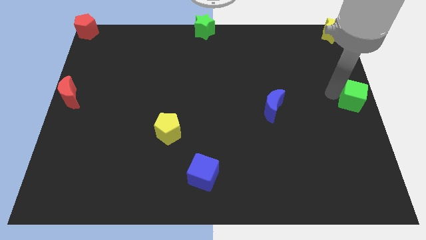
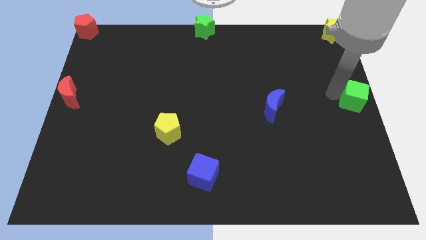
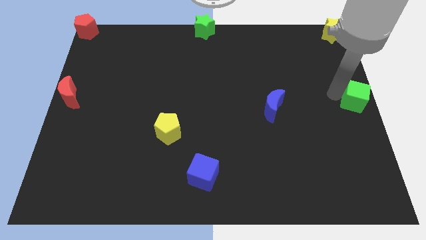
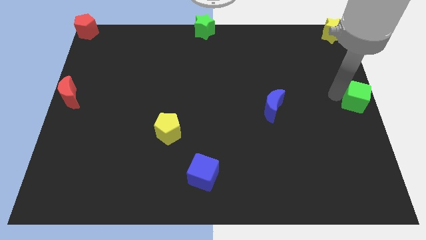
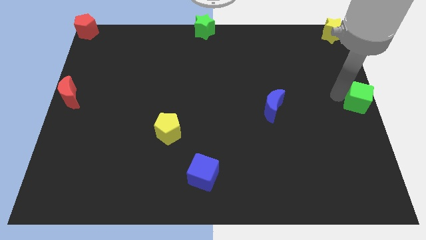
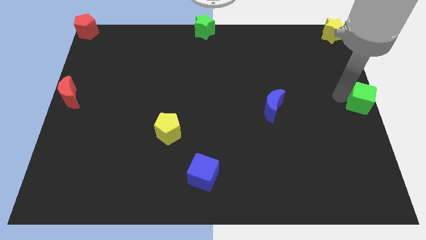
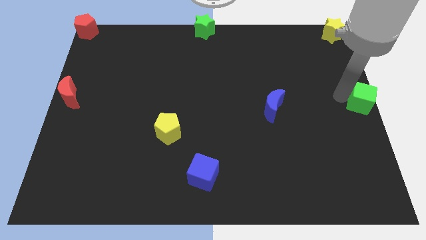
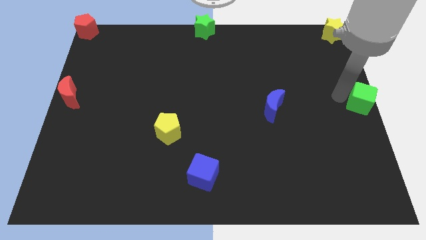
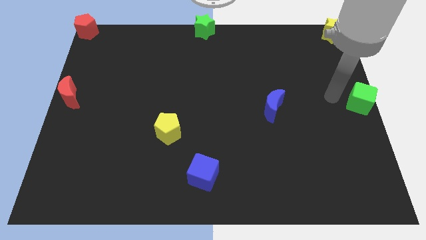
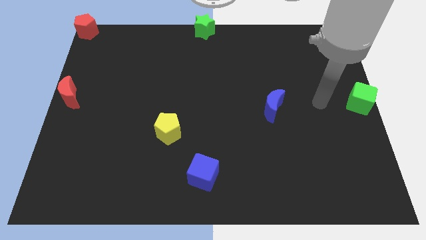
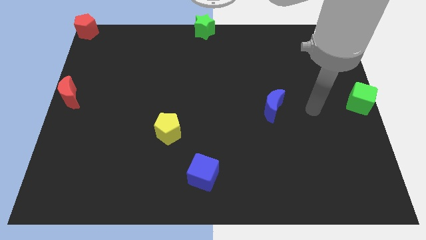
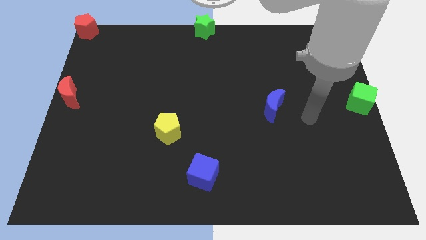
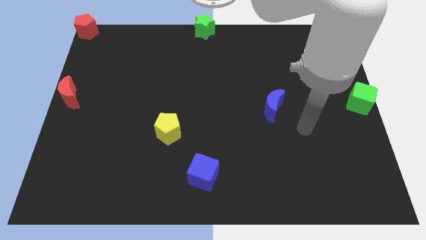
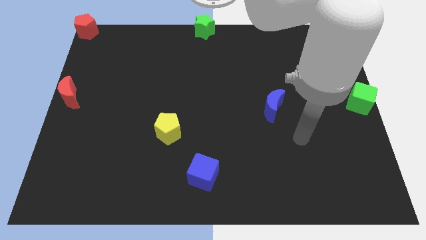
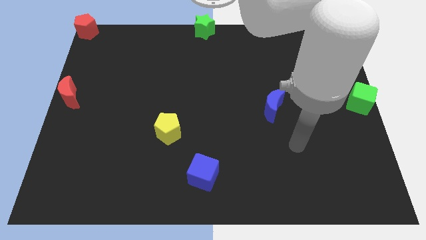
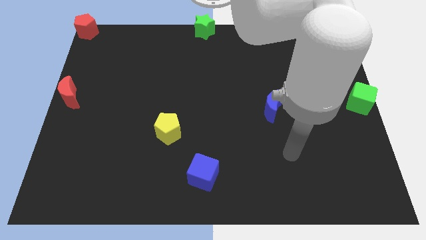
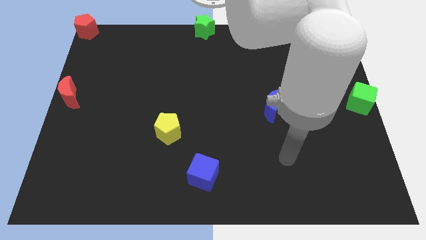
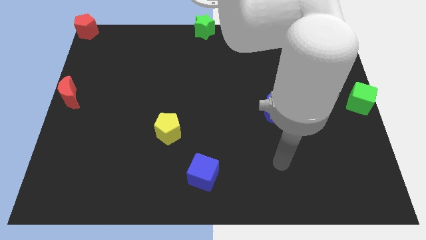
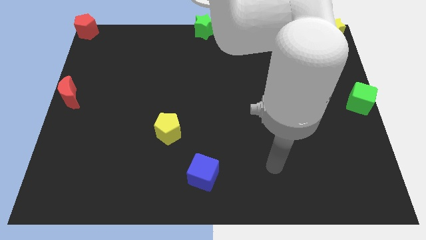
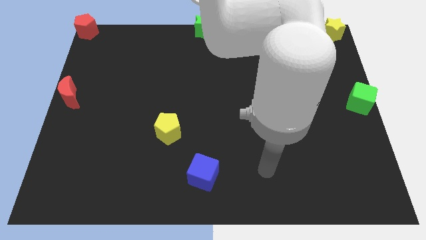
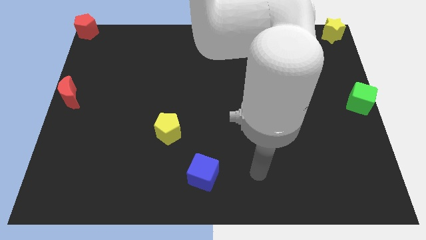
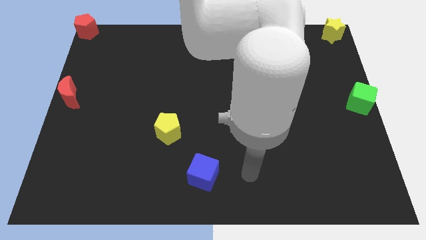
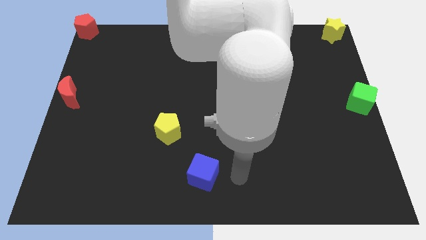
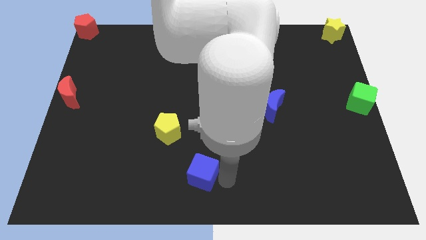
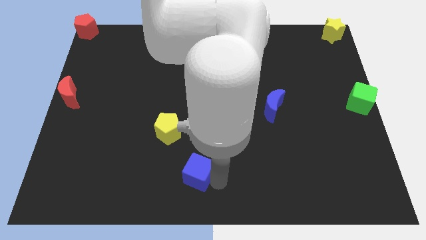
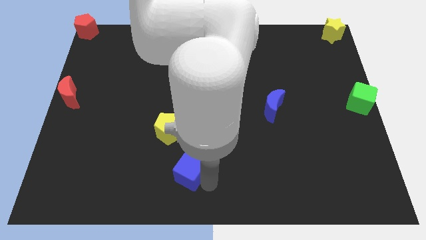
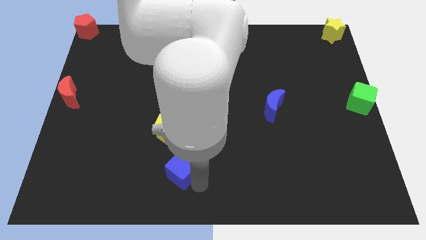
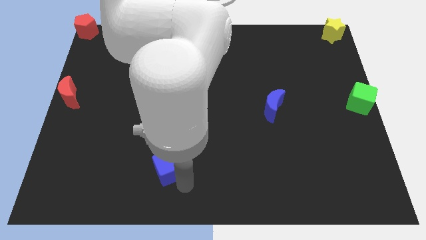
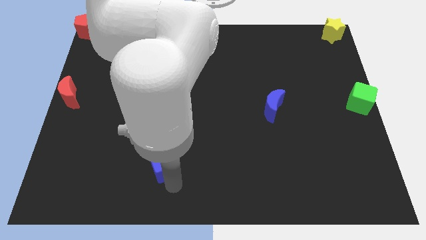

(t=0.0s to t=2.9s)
push blue cube below yellow pentagon

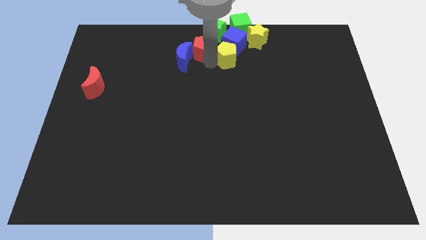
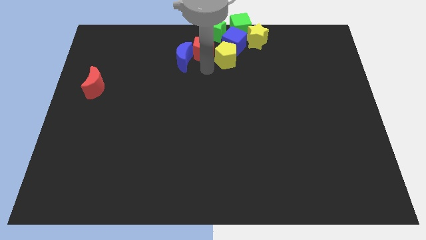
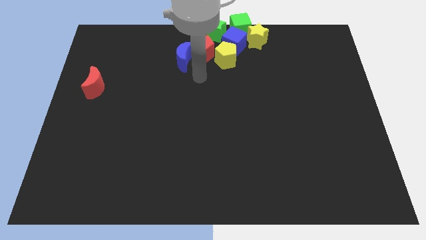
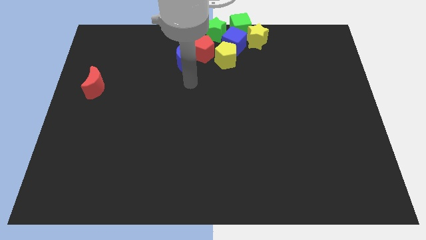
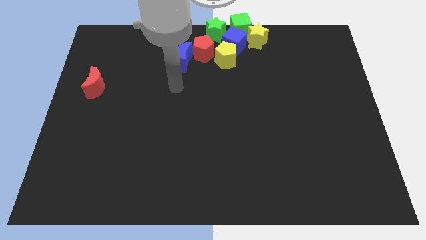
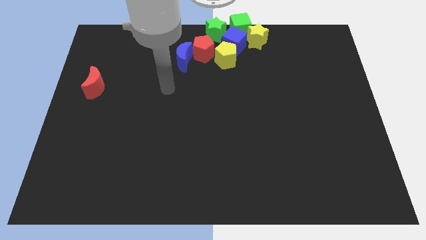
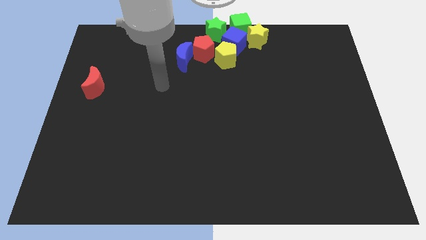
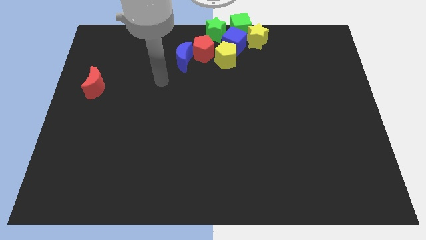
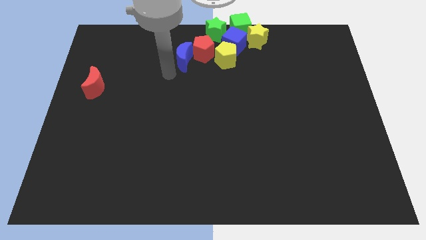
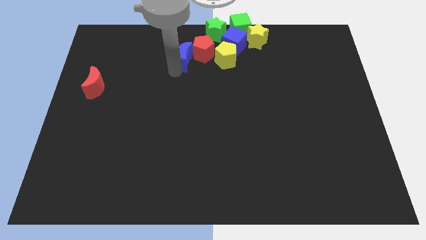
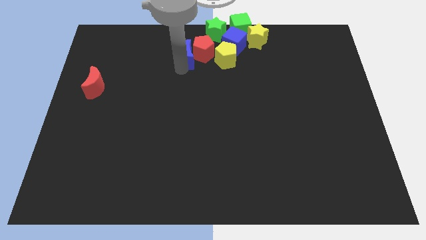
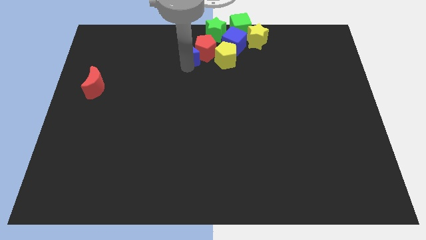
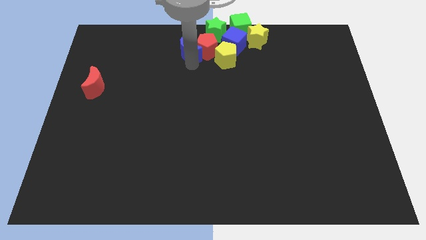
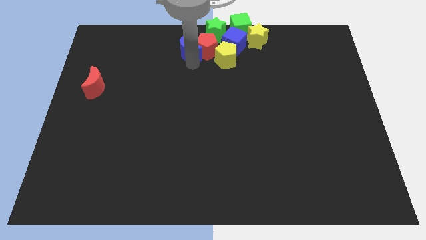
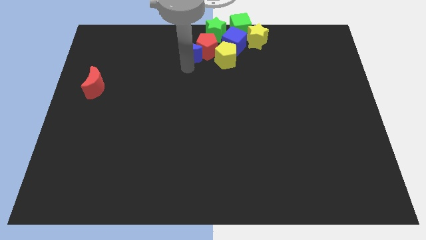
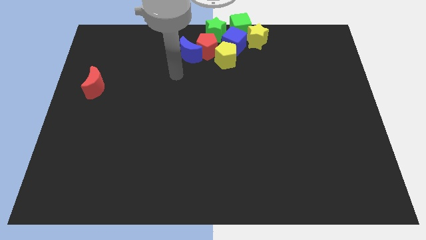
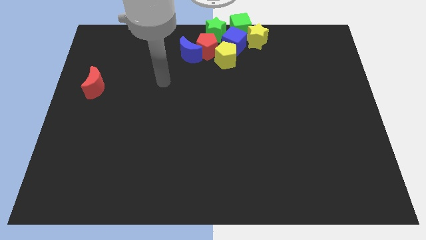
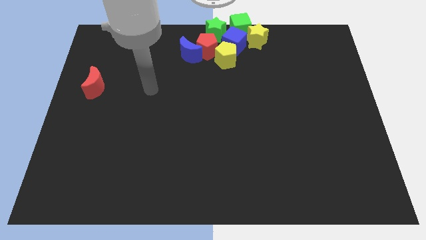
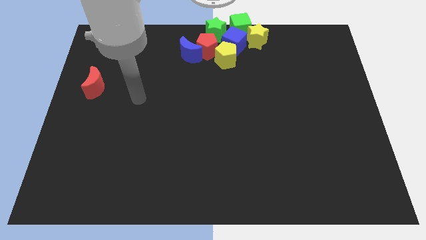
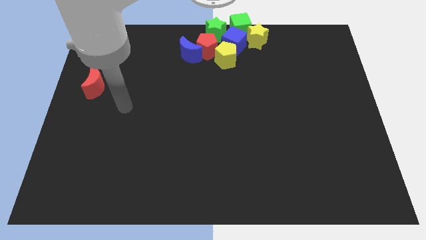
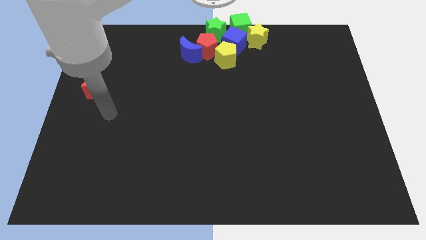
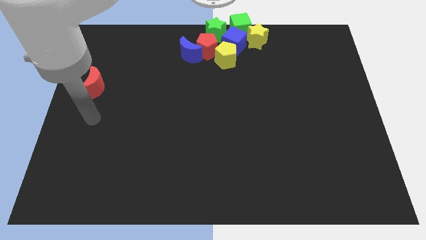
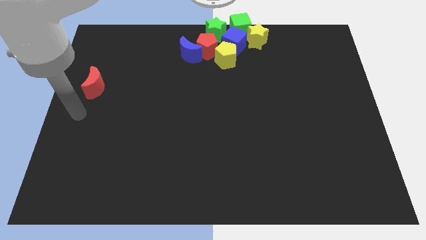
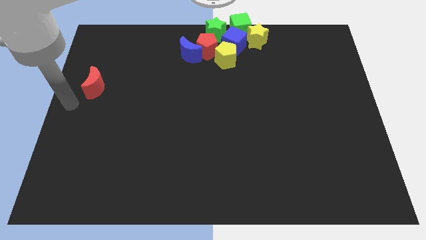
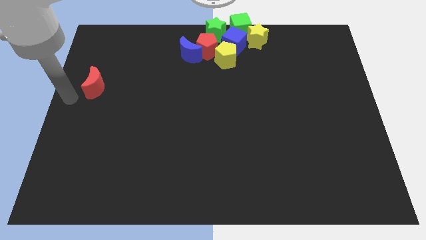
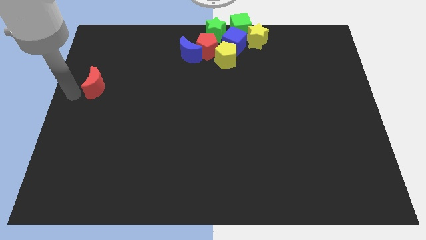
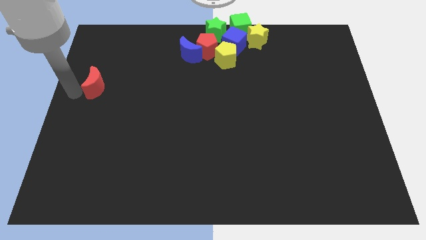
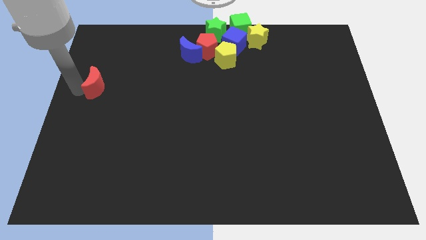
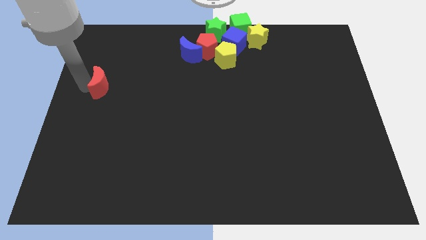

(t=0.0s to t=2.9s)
push the blue crescent into the red pentagon

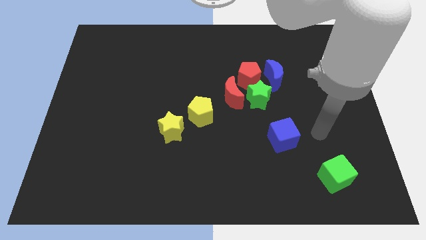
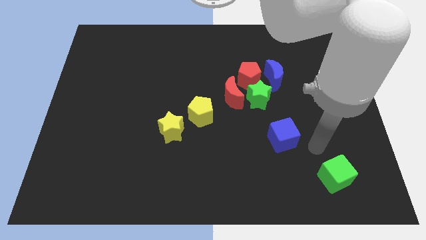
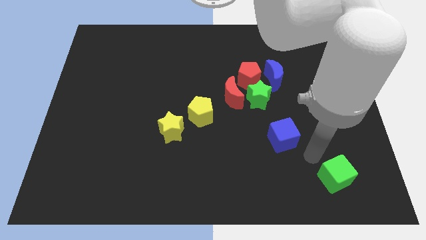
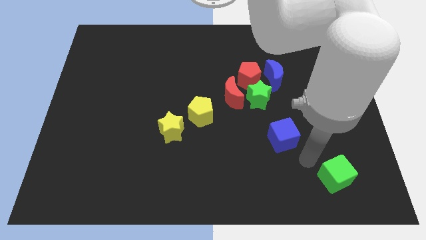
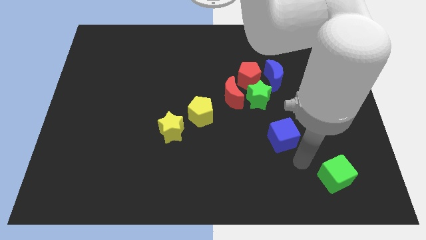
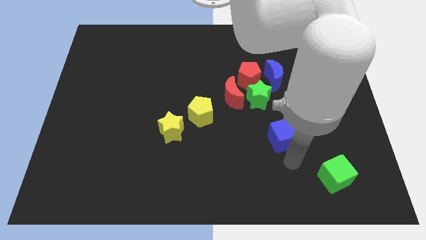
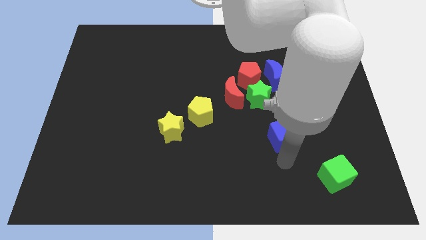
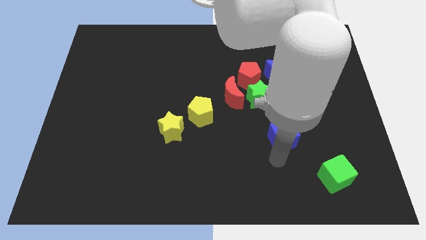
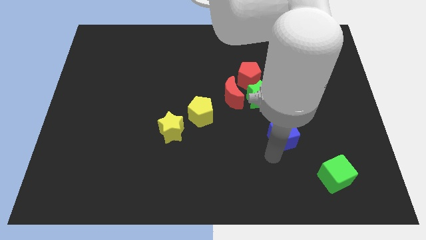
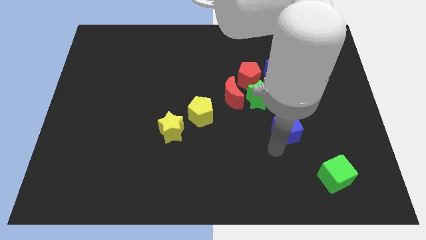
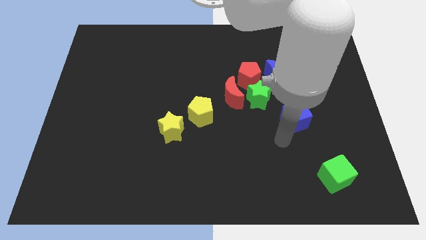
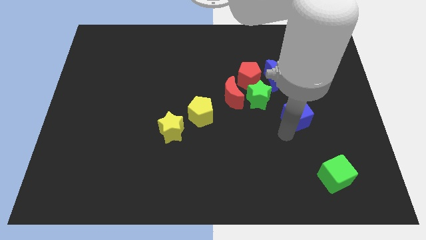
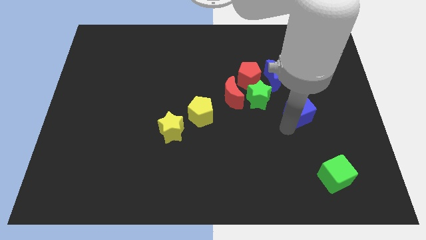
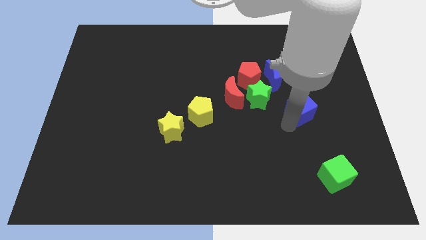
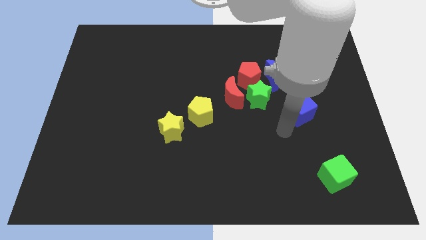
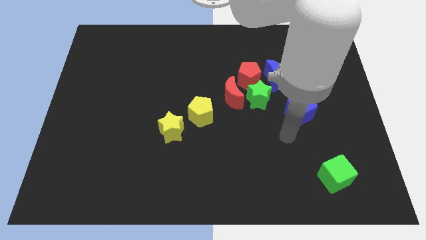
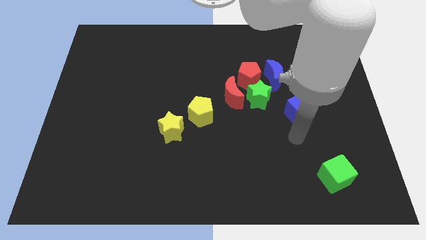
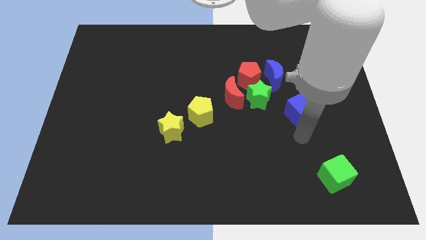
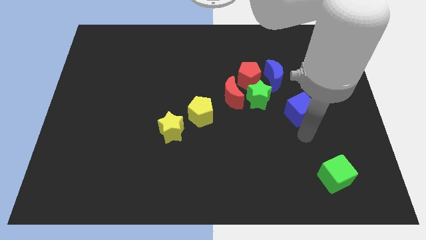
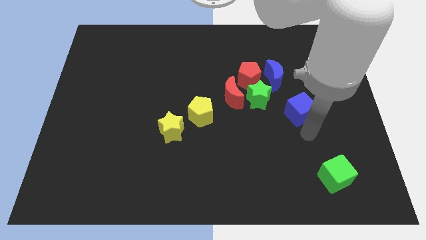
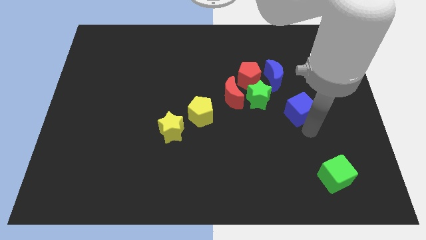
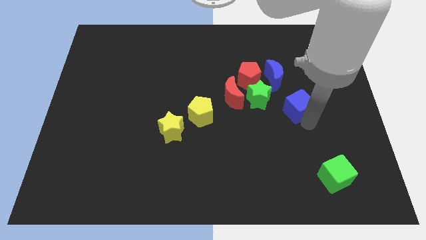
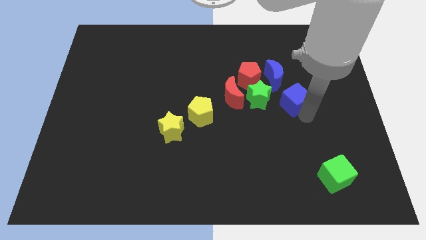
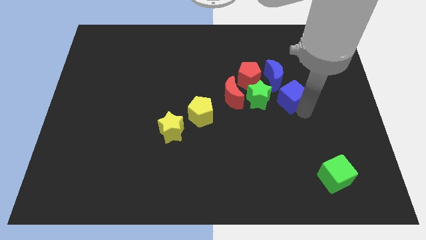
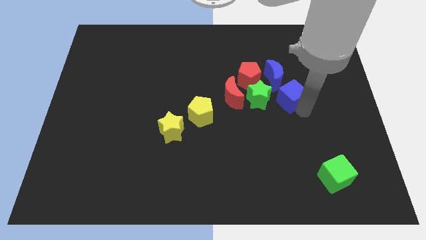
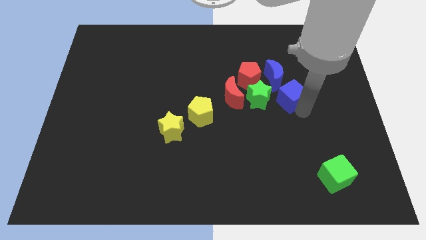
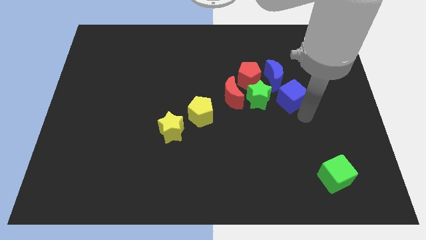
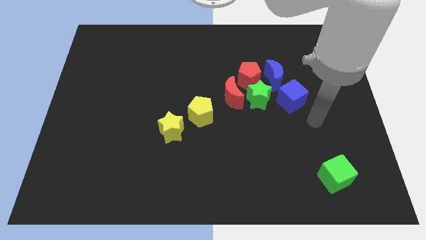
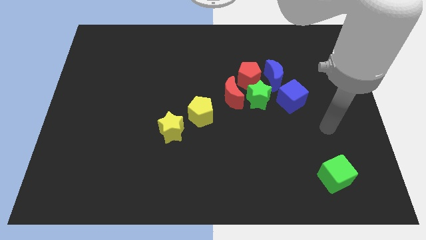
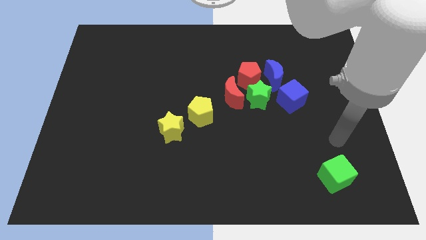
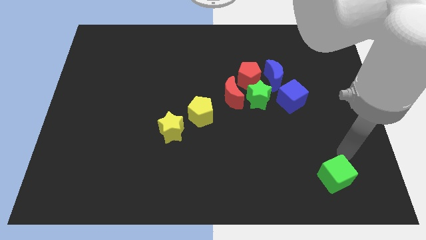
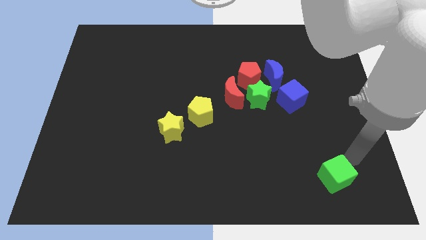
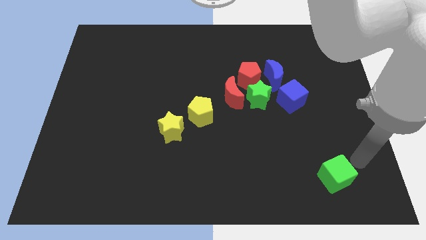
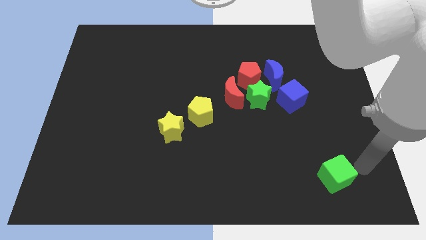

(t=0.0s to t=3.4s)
push the blue cube right to the green star
